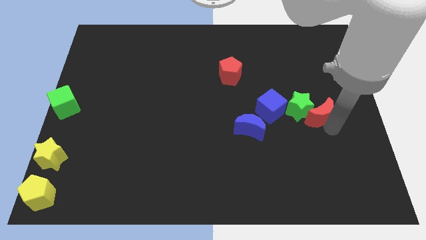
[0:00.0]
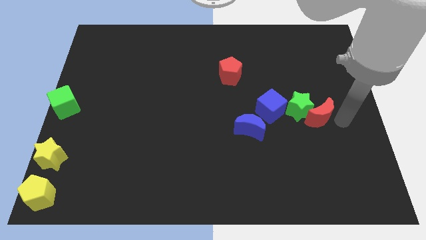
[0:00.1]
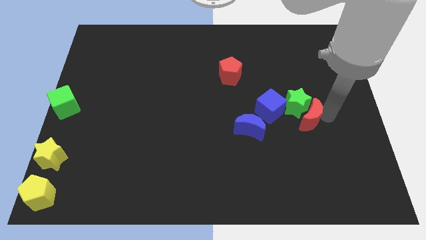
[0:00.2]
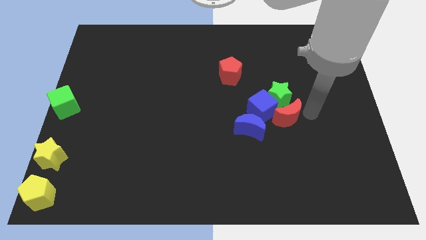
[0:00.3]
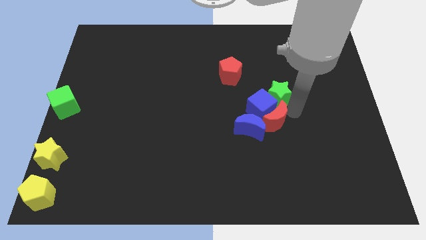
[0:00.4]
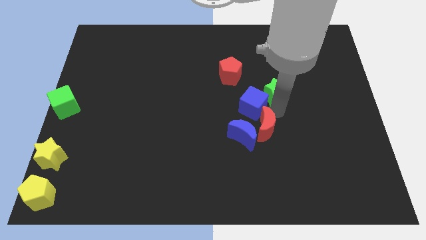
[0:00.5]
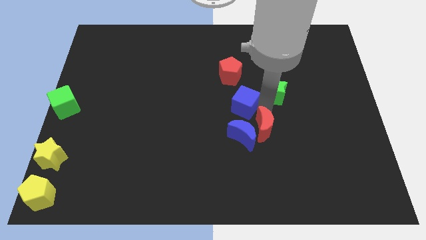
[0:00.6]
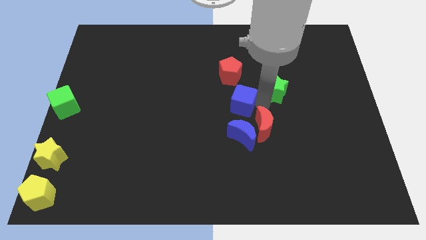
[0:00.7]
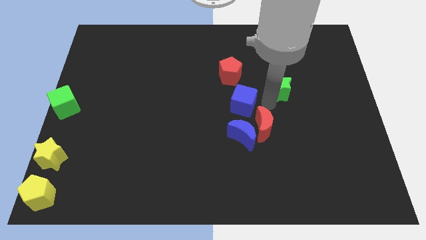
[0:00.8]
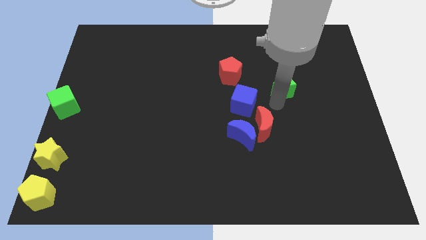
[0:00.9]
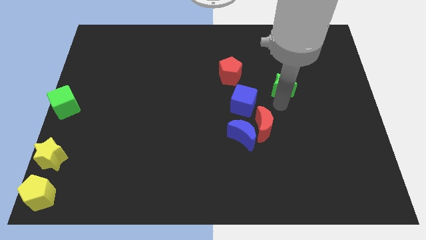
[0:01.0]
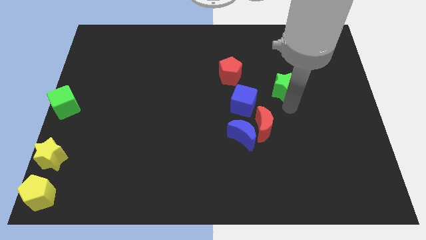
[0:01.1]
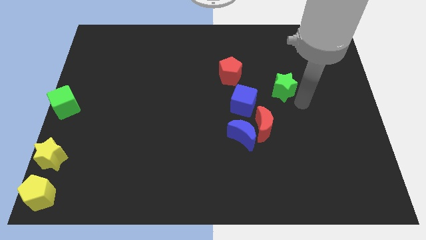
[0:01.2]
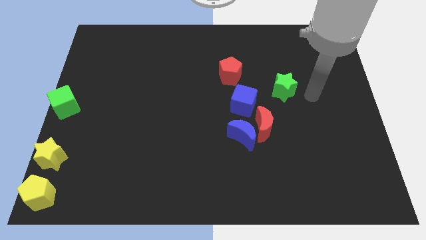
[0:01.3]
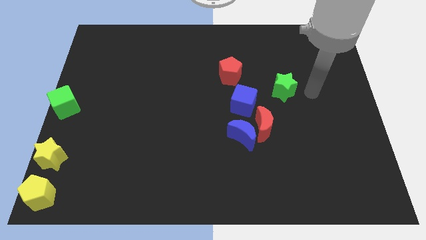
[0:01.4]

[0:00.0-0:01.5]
move the red moon to the left

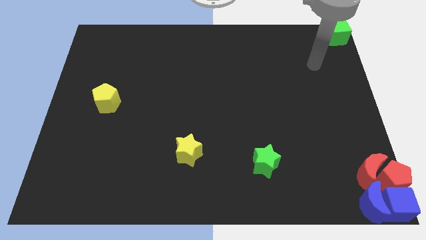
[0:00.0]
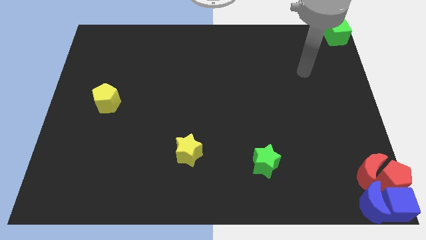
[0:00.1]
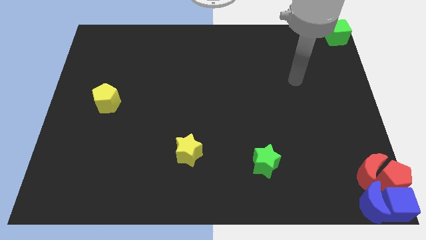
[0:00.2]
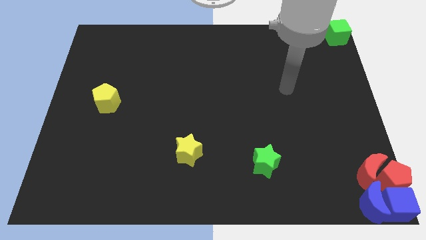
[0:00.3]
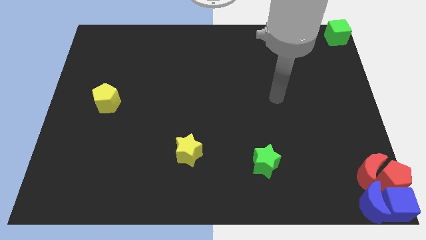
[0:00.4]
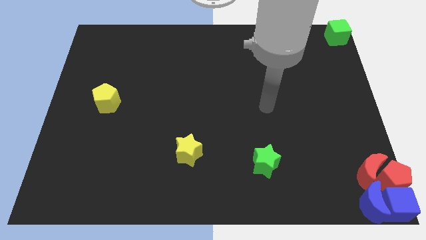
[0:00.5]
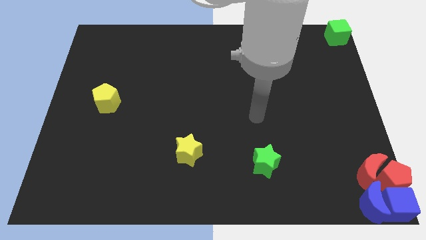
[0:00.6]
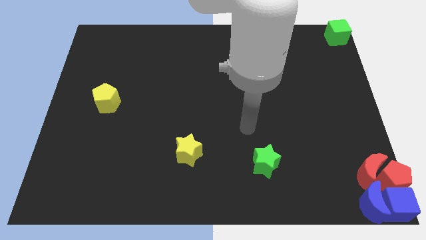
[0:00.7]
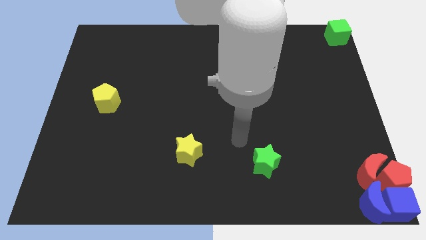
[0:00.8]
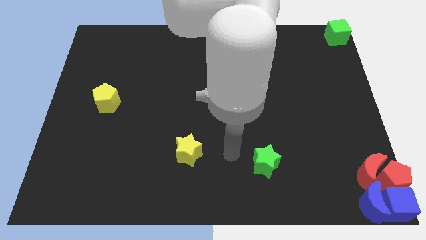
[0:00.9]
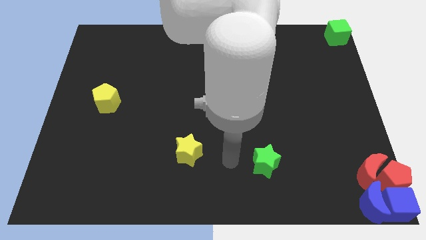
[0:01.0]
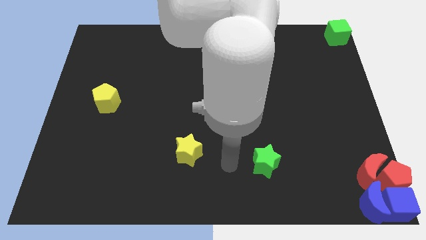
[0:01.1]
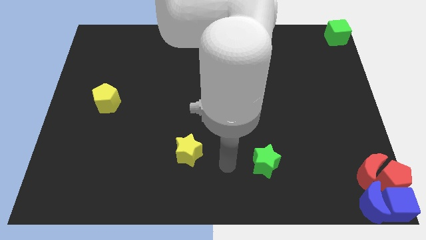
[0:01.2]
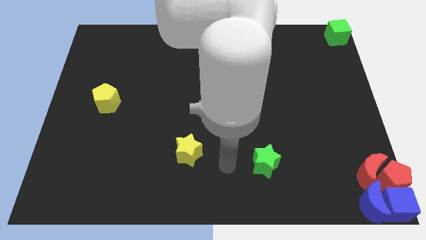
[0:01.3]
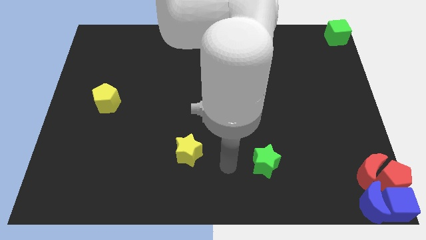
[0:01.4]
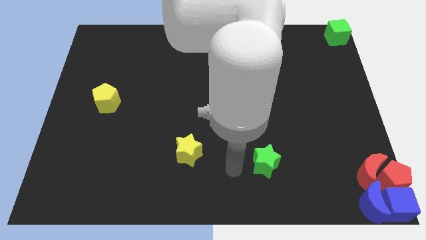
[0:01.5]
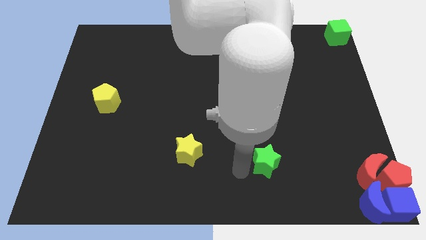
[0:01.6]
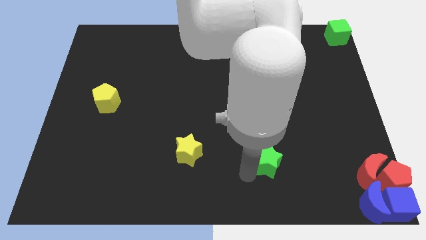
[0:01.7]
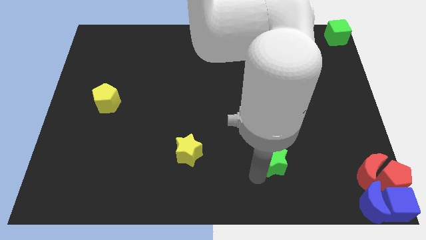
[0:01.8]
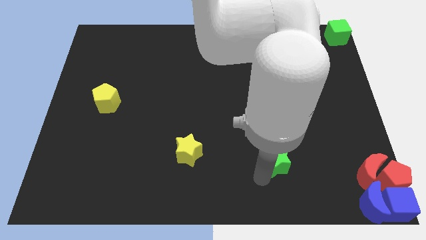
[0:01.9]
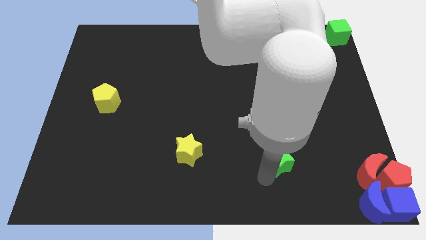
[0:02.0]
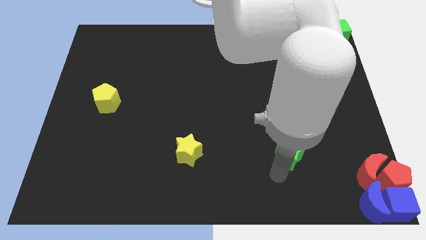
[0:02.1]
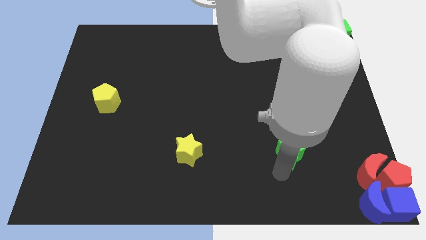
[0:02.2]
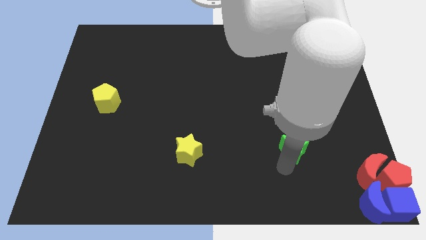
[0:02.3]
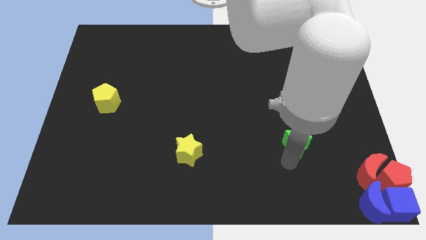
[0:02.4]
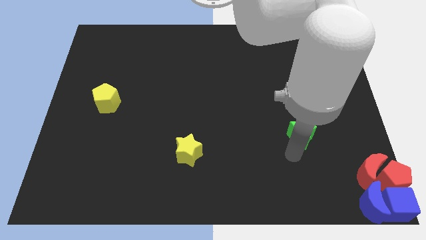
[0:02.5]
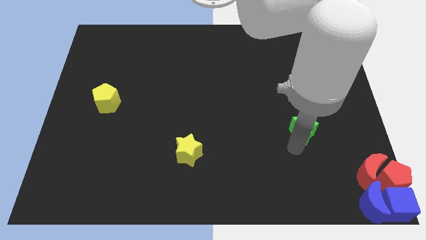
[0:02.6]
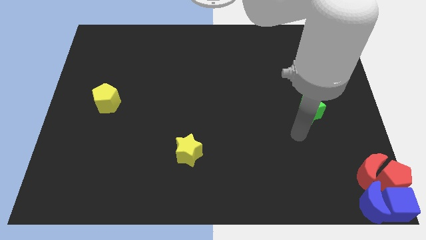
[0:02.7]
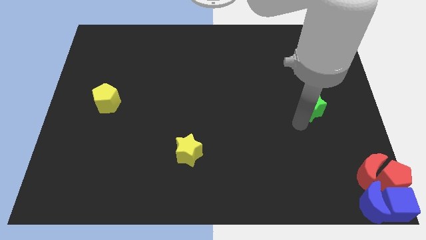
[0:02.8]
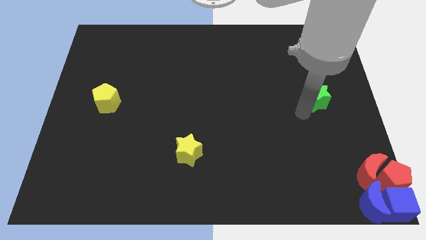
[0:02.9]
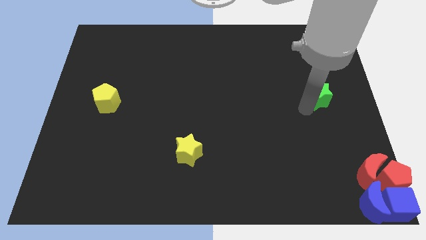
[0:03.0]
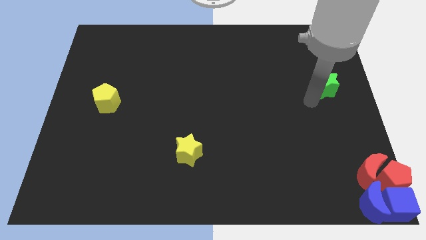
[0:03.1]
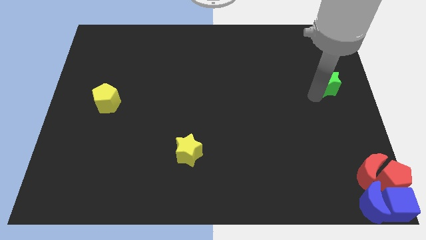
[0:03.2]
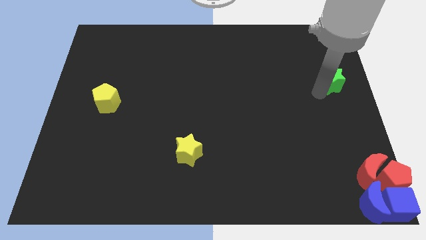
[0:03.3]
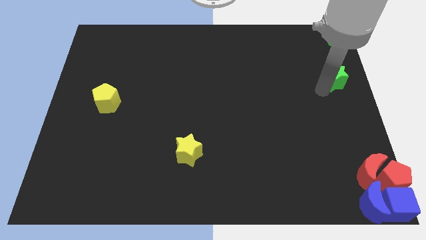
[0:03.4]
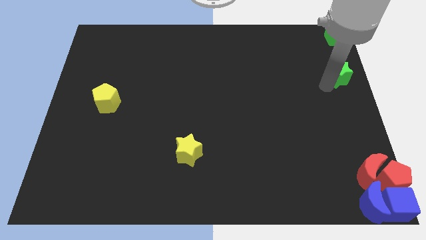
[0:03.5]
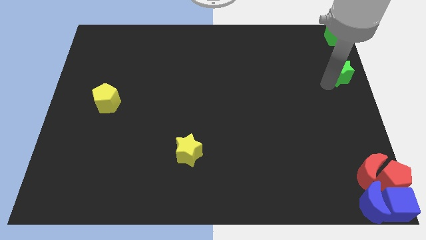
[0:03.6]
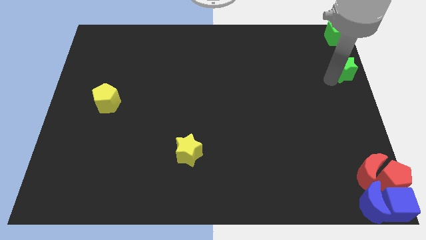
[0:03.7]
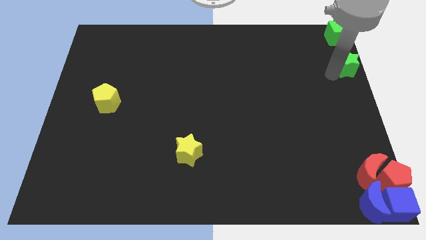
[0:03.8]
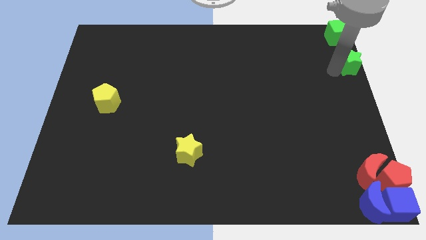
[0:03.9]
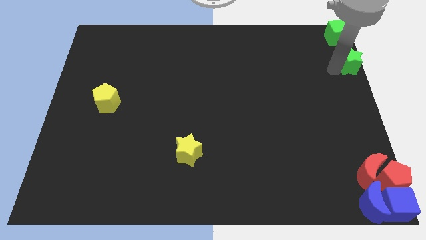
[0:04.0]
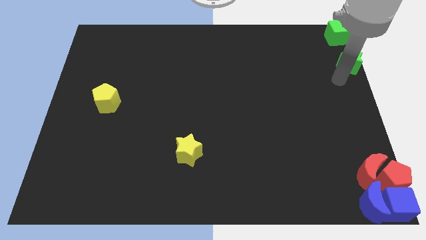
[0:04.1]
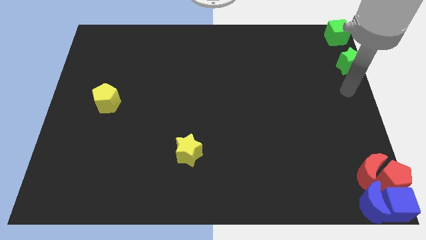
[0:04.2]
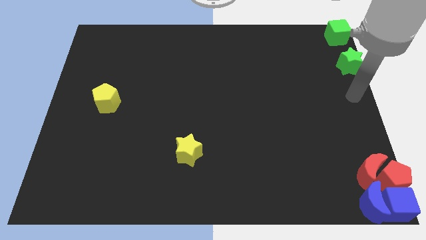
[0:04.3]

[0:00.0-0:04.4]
push the green star towards the green cube

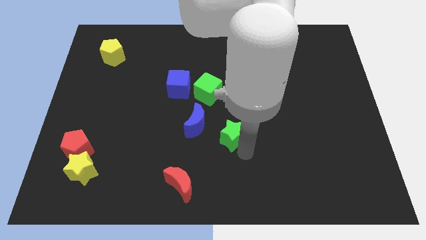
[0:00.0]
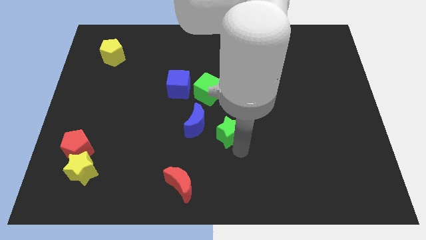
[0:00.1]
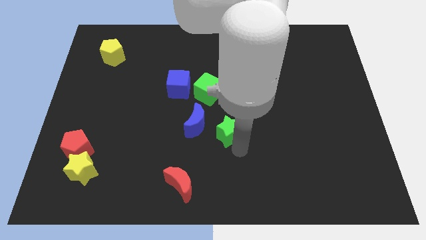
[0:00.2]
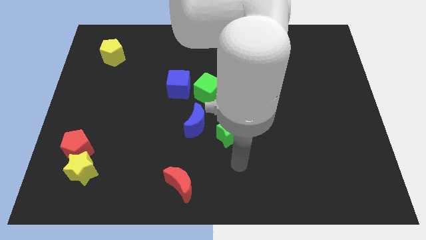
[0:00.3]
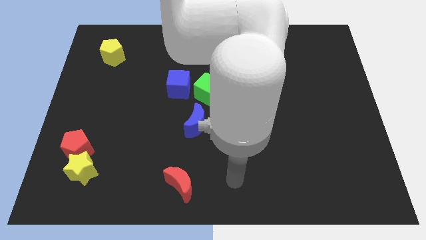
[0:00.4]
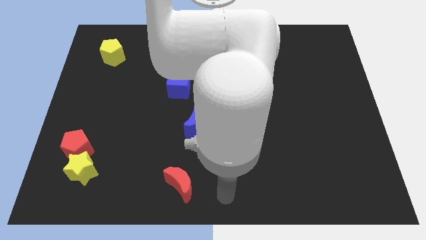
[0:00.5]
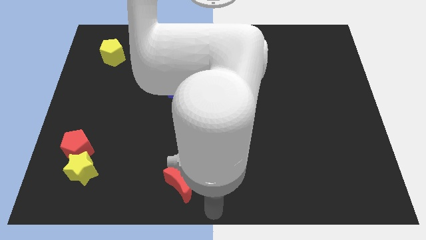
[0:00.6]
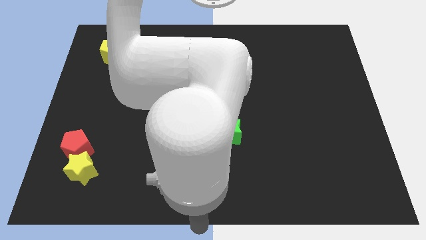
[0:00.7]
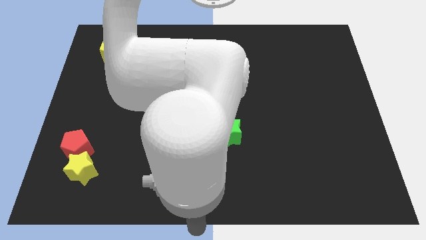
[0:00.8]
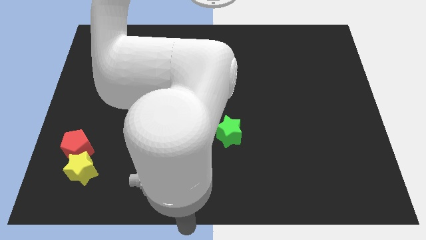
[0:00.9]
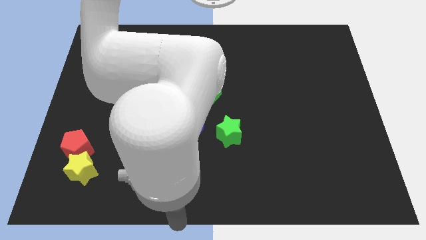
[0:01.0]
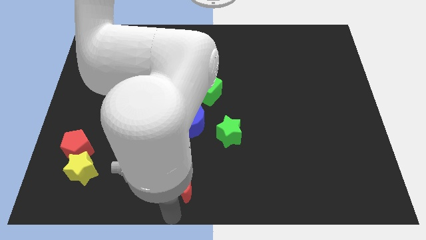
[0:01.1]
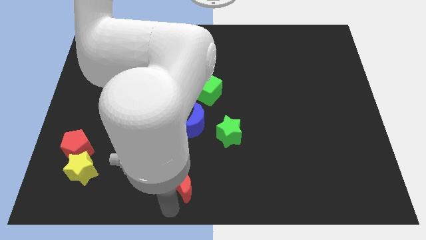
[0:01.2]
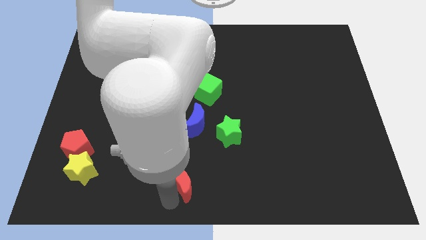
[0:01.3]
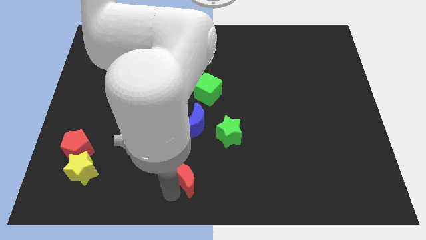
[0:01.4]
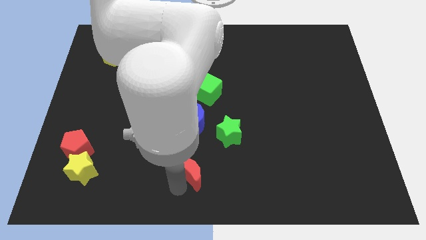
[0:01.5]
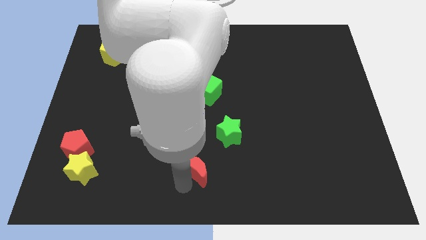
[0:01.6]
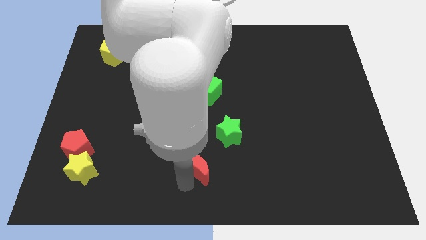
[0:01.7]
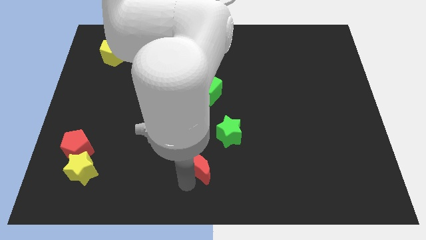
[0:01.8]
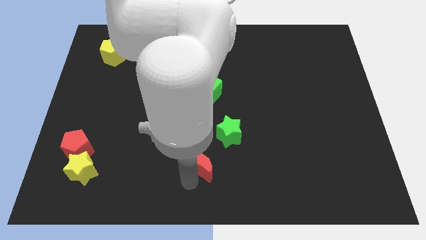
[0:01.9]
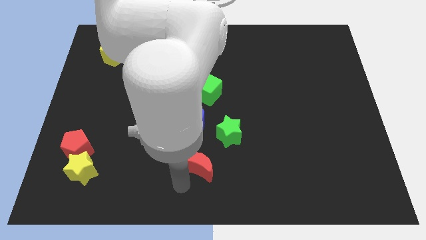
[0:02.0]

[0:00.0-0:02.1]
move the red crescent below the blue moon

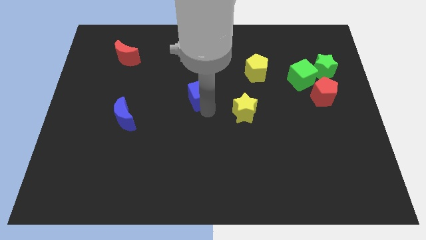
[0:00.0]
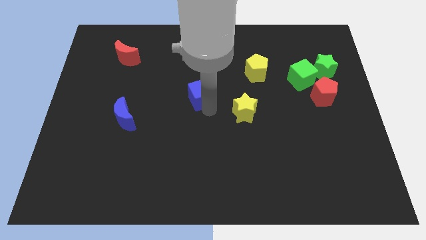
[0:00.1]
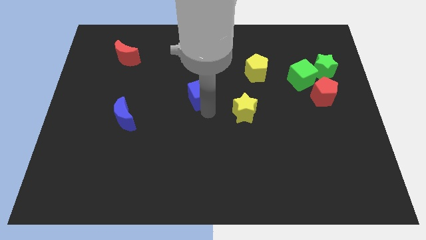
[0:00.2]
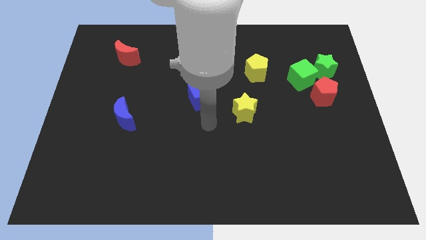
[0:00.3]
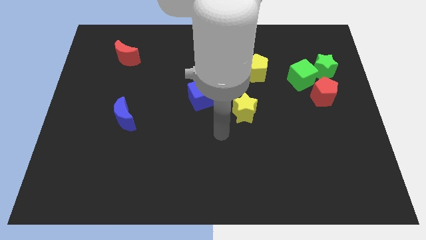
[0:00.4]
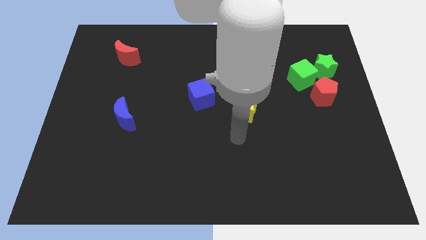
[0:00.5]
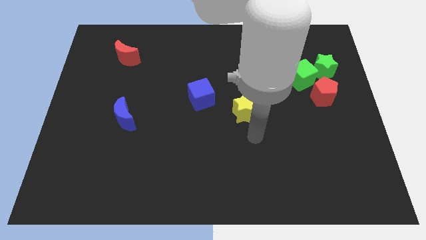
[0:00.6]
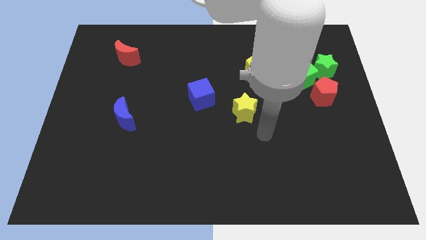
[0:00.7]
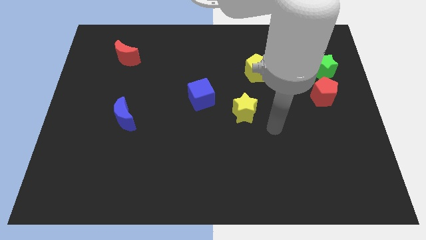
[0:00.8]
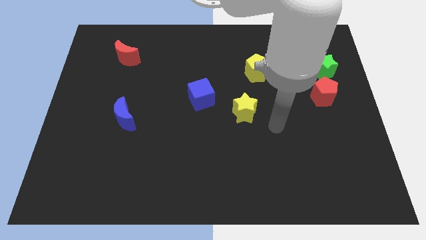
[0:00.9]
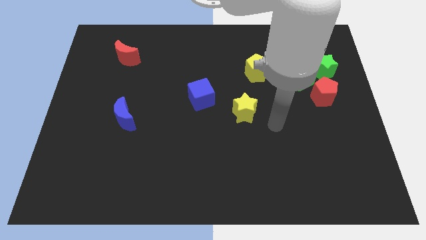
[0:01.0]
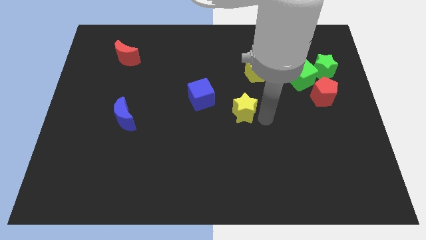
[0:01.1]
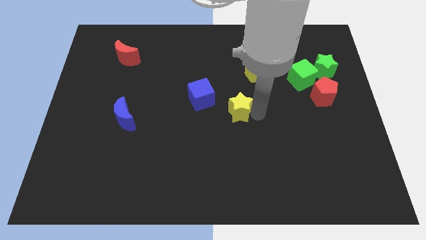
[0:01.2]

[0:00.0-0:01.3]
place your arm on the bottom right side of yellow star
